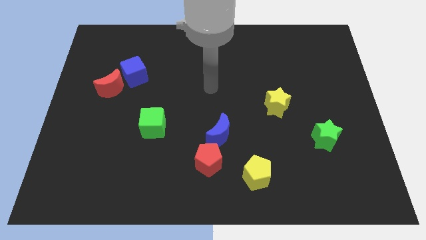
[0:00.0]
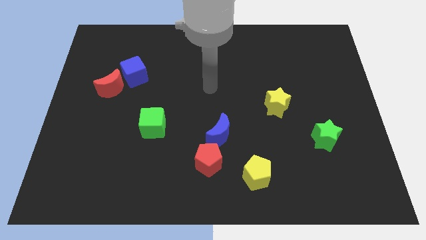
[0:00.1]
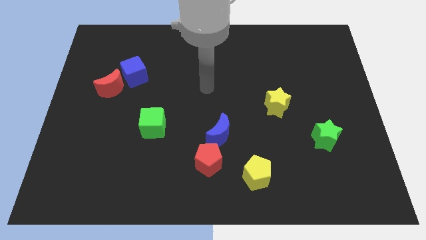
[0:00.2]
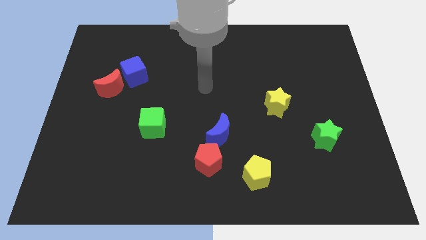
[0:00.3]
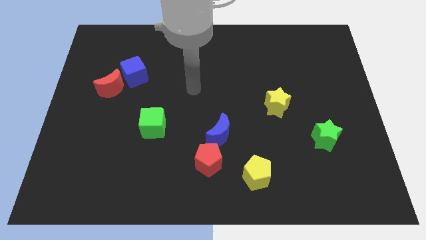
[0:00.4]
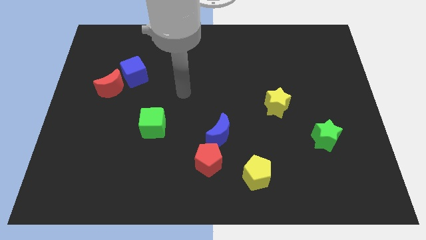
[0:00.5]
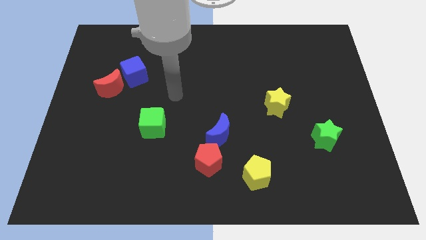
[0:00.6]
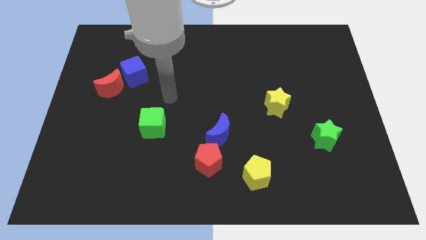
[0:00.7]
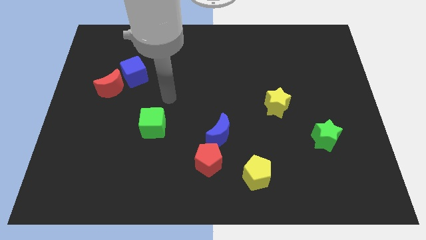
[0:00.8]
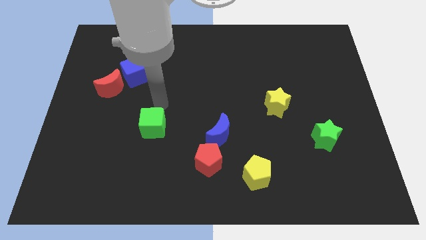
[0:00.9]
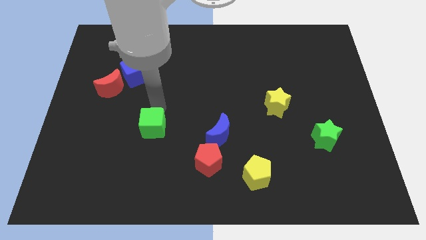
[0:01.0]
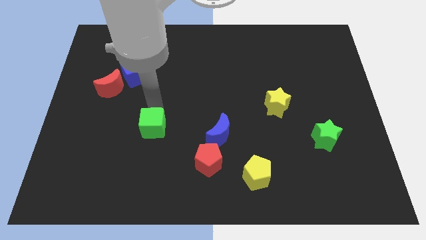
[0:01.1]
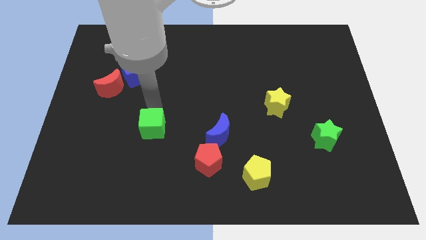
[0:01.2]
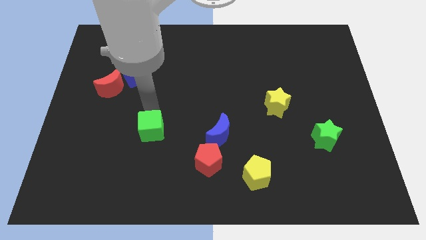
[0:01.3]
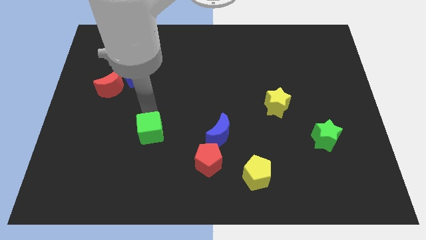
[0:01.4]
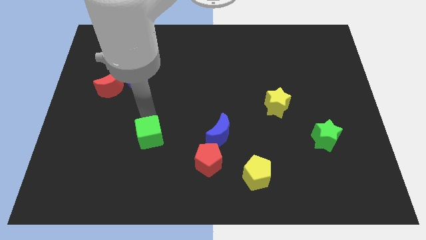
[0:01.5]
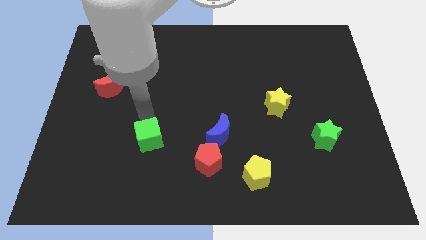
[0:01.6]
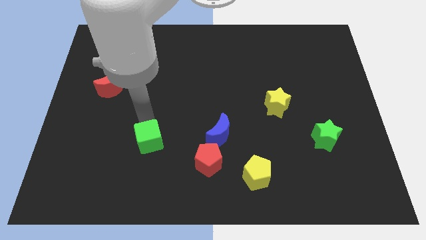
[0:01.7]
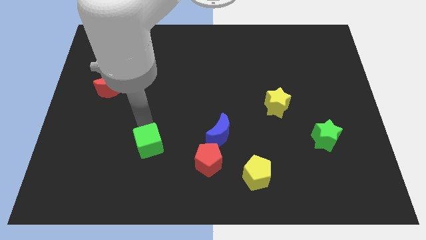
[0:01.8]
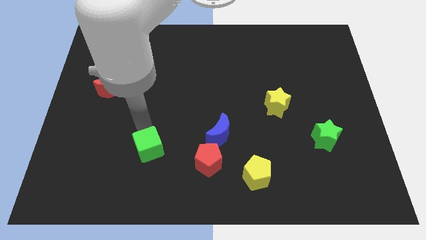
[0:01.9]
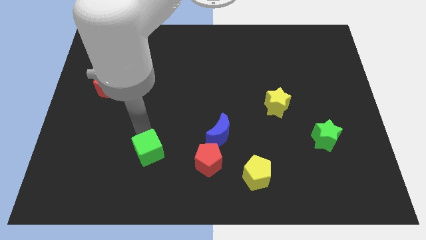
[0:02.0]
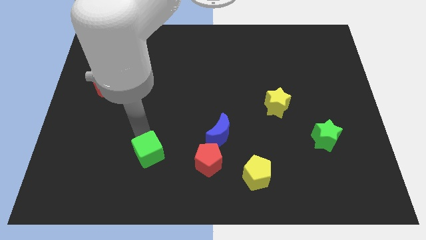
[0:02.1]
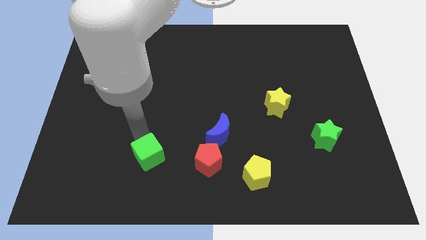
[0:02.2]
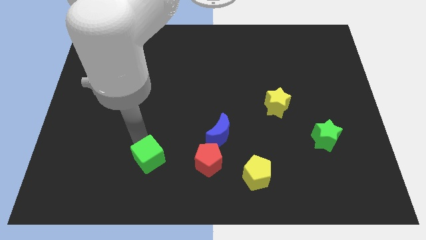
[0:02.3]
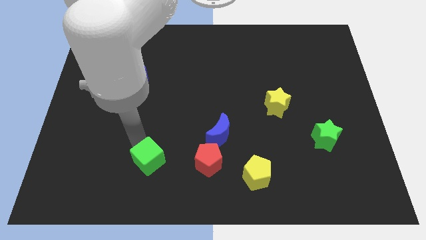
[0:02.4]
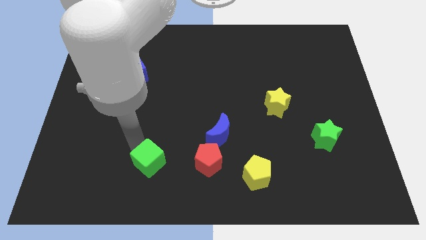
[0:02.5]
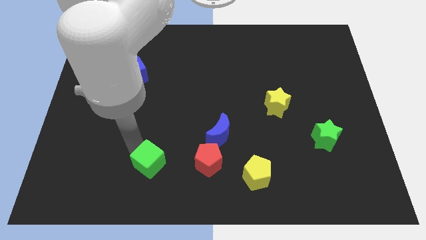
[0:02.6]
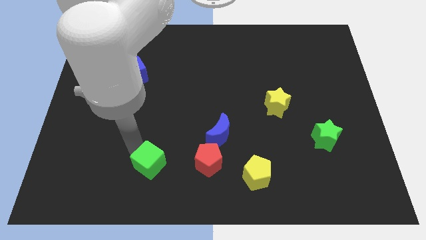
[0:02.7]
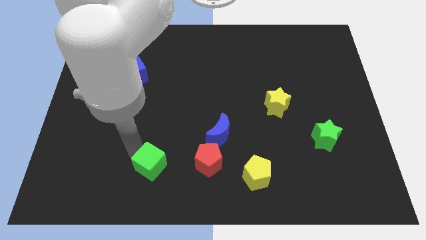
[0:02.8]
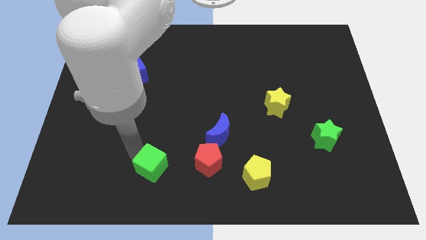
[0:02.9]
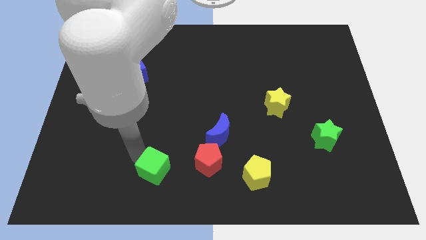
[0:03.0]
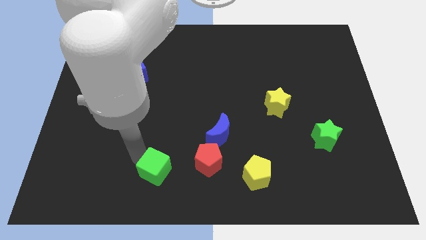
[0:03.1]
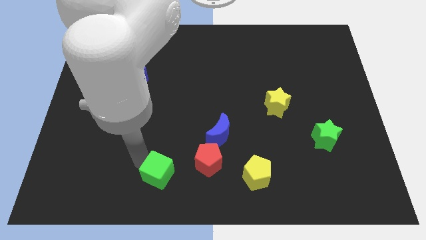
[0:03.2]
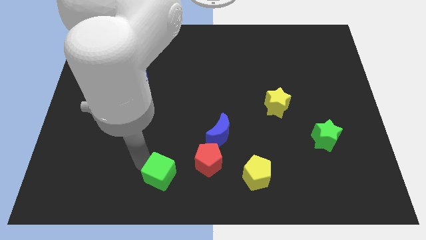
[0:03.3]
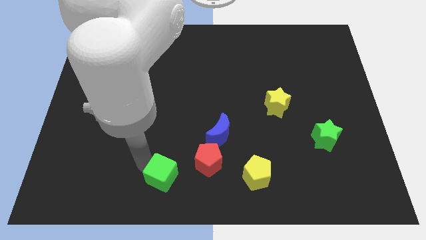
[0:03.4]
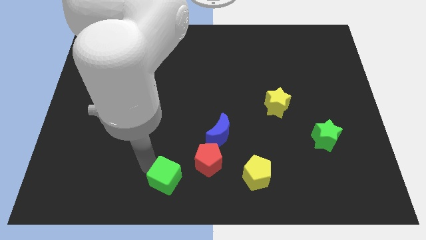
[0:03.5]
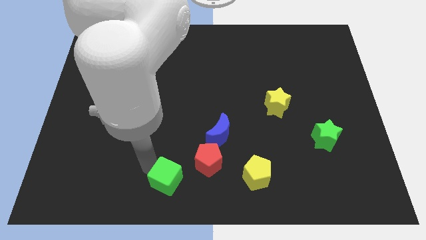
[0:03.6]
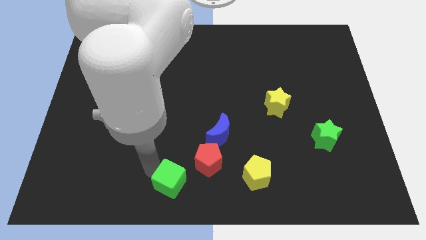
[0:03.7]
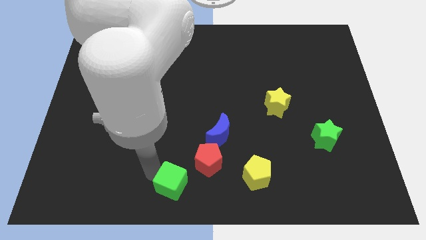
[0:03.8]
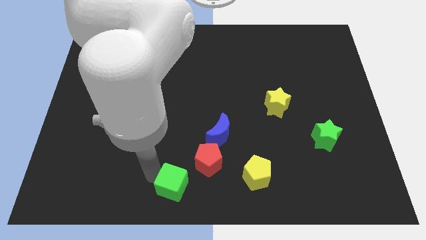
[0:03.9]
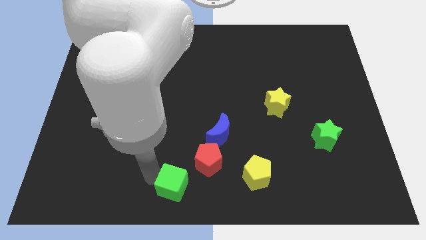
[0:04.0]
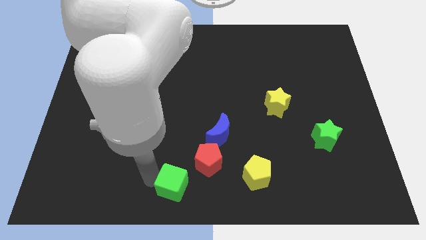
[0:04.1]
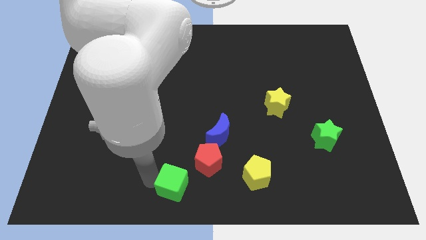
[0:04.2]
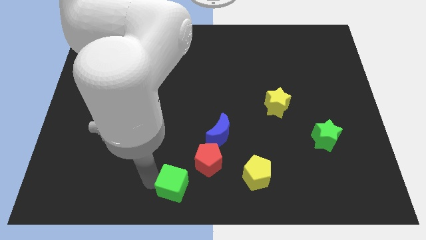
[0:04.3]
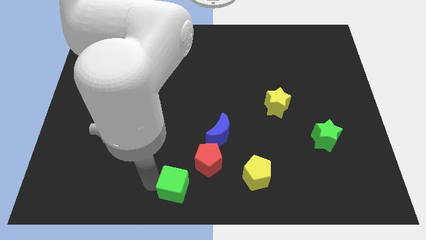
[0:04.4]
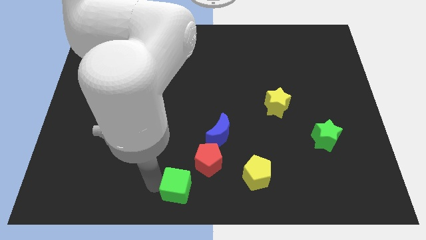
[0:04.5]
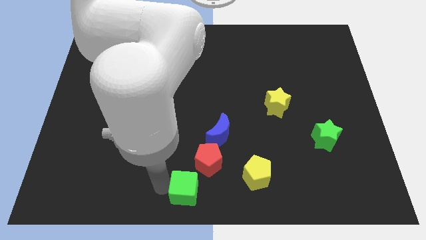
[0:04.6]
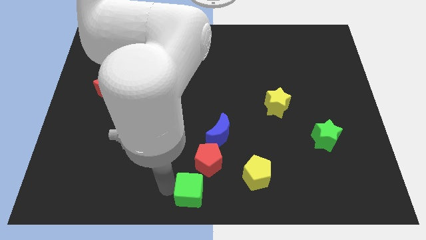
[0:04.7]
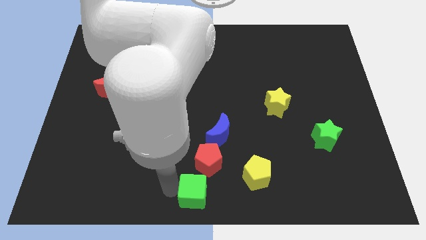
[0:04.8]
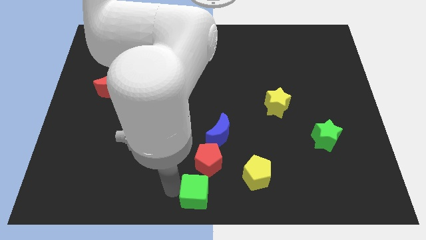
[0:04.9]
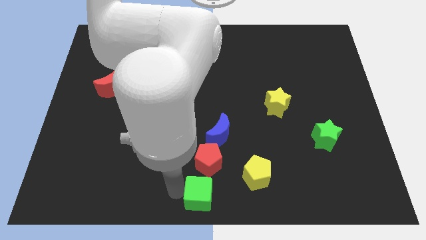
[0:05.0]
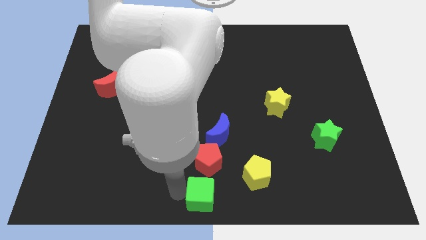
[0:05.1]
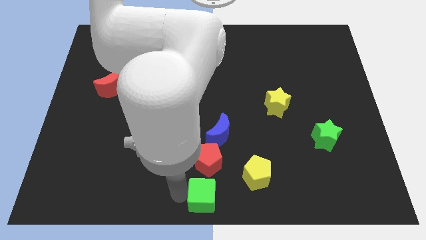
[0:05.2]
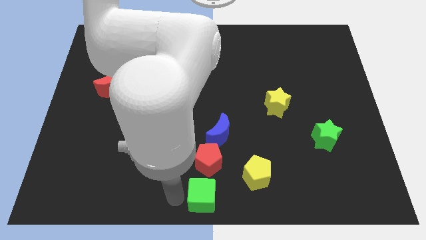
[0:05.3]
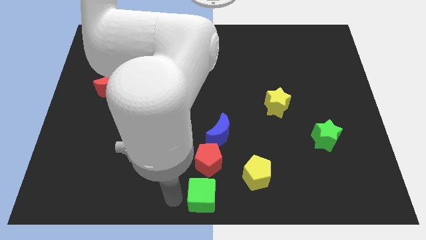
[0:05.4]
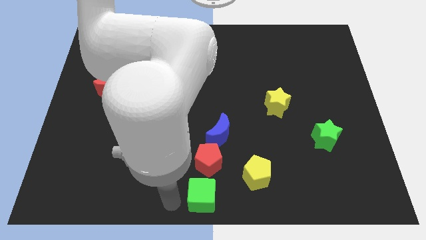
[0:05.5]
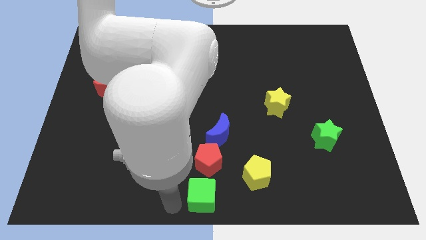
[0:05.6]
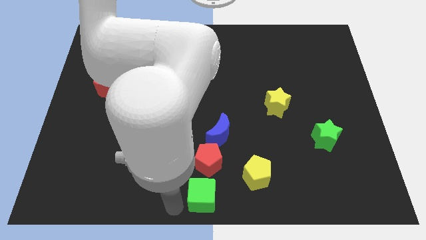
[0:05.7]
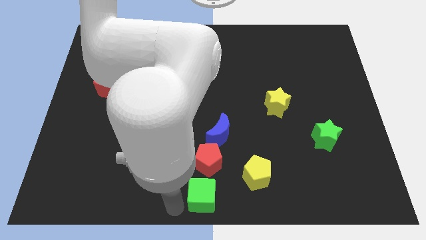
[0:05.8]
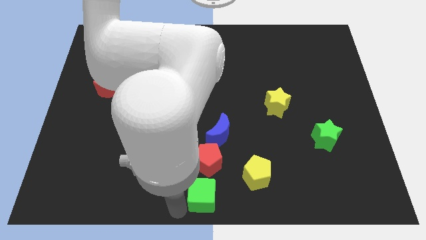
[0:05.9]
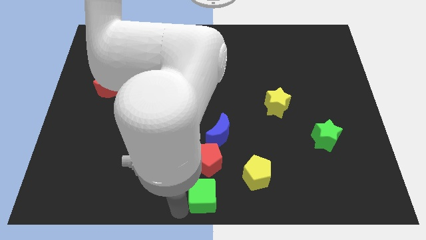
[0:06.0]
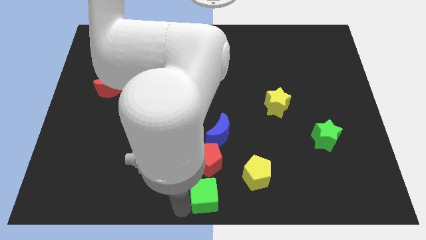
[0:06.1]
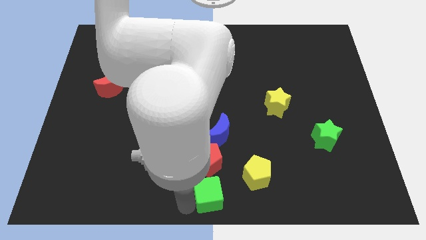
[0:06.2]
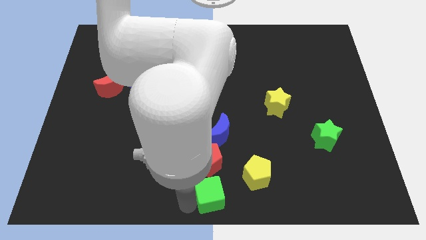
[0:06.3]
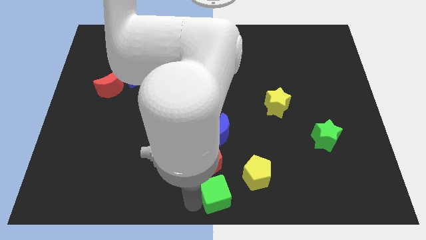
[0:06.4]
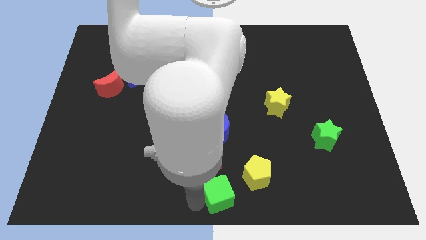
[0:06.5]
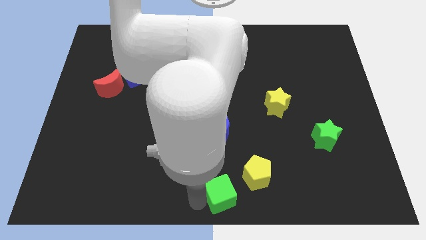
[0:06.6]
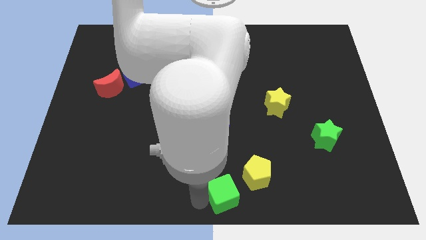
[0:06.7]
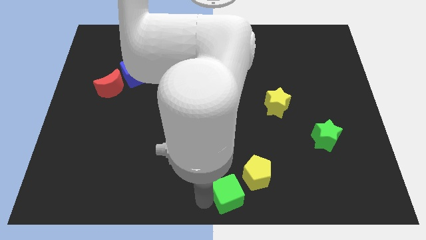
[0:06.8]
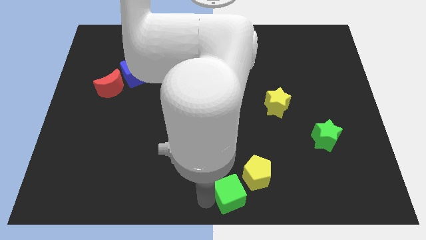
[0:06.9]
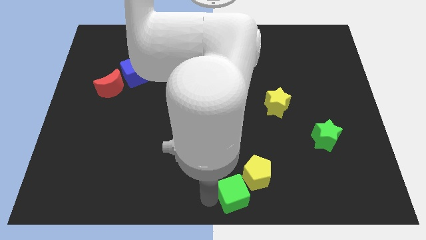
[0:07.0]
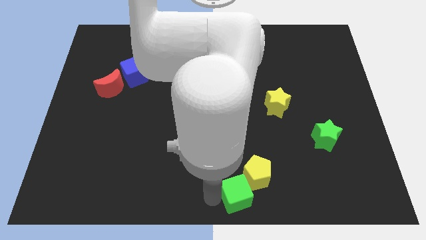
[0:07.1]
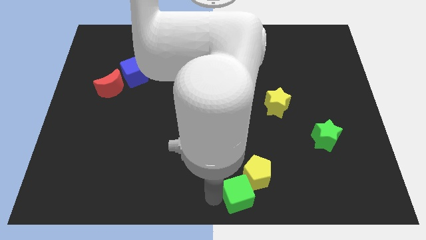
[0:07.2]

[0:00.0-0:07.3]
move the green cube close to the yellow pentagon

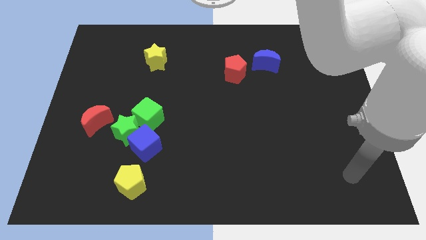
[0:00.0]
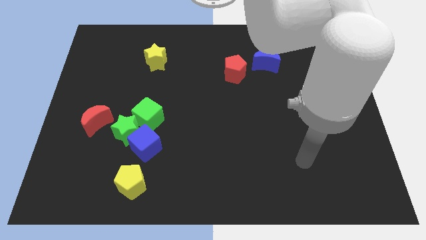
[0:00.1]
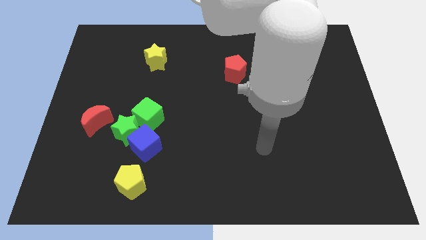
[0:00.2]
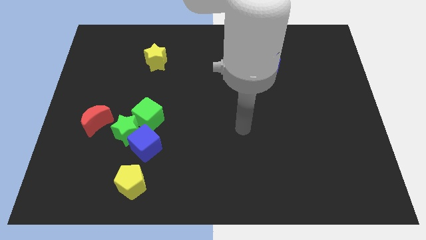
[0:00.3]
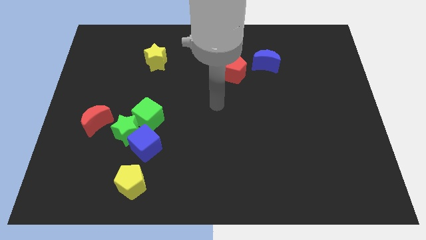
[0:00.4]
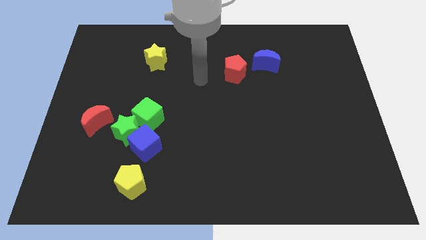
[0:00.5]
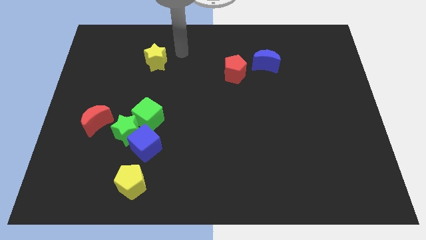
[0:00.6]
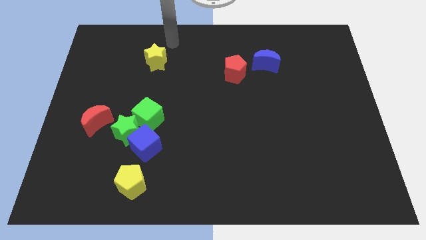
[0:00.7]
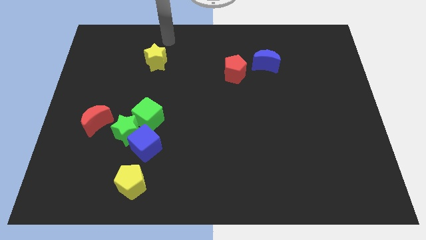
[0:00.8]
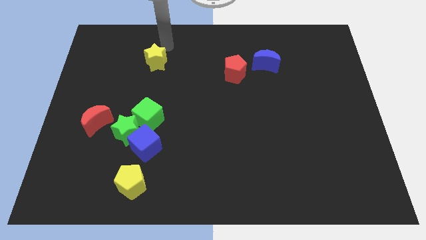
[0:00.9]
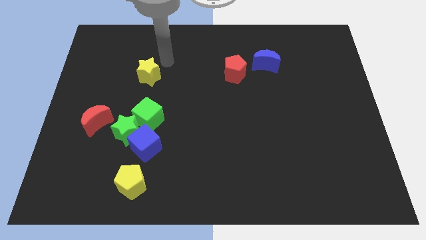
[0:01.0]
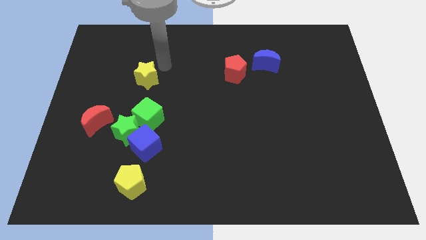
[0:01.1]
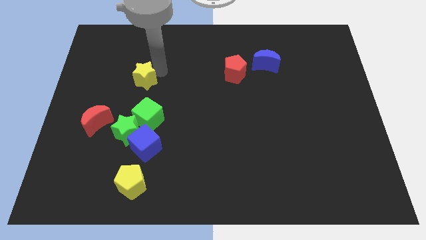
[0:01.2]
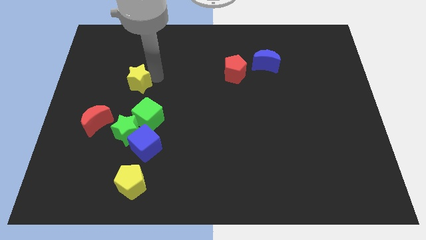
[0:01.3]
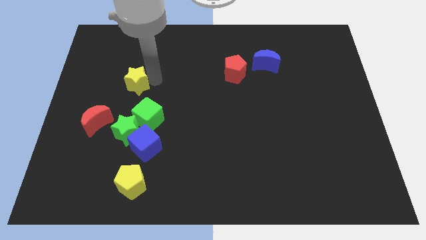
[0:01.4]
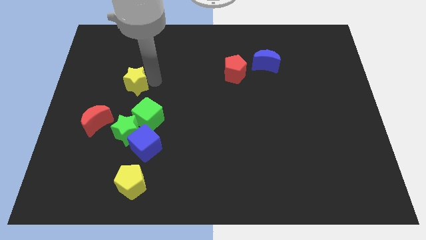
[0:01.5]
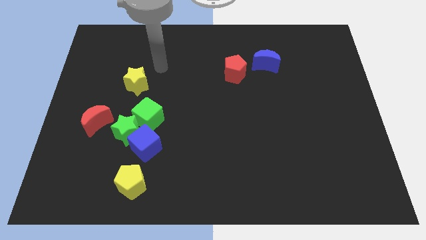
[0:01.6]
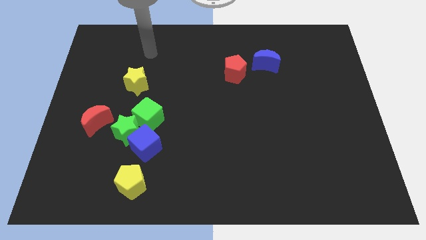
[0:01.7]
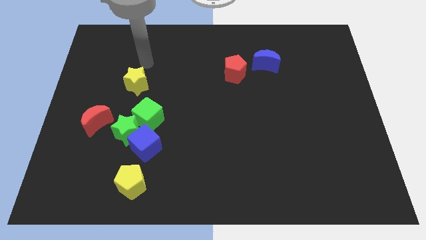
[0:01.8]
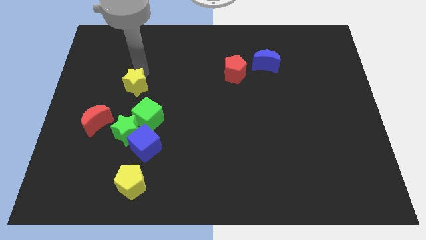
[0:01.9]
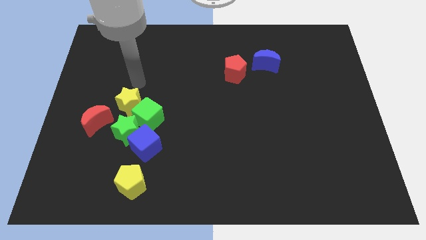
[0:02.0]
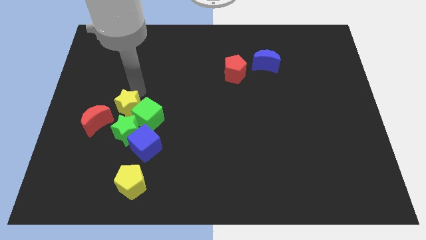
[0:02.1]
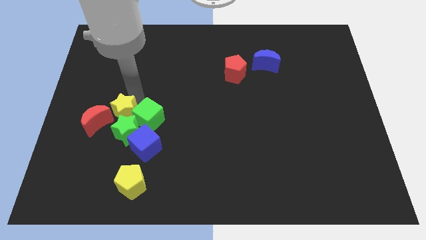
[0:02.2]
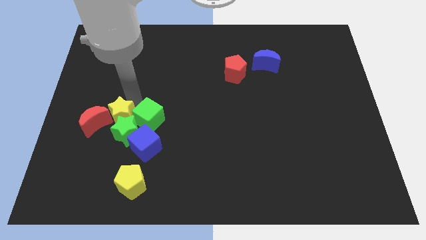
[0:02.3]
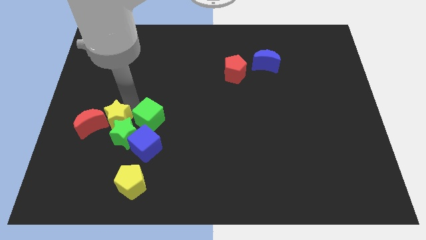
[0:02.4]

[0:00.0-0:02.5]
put the yellow star close to the green star
